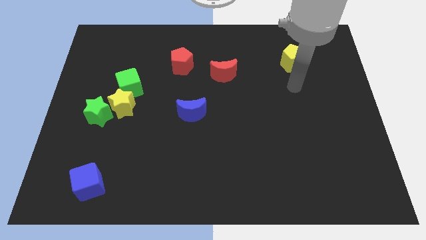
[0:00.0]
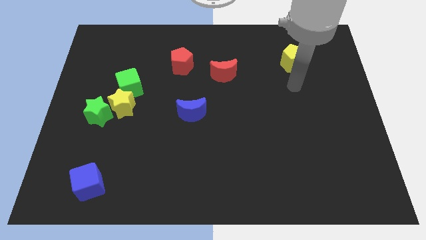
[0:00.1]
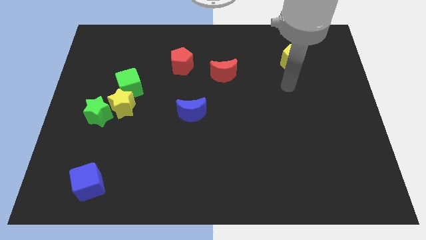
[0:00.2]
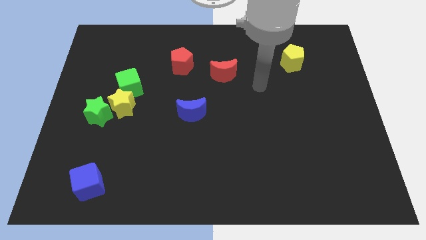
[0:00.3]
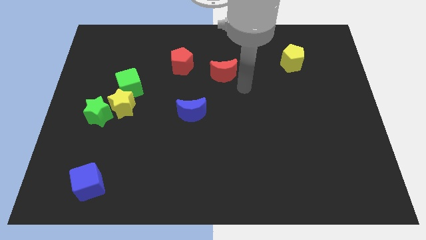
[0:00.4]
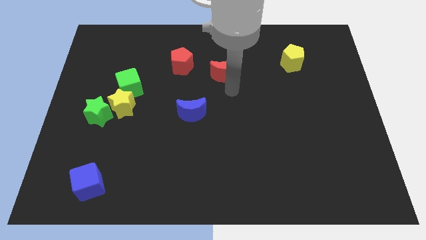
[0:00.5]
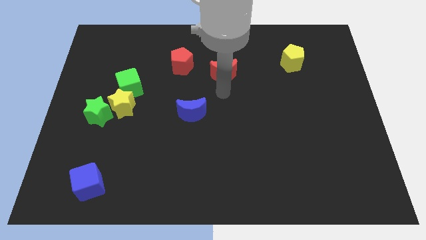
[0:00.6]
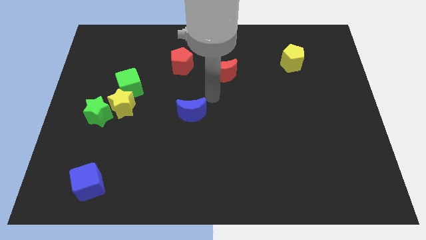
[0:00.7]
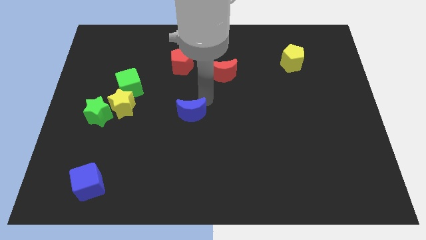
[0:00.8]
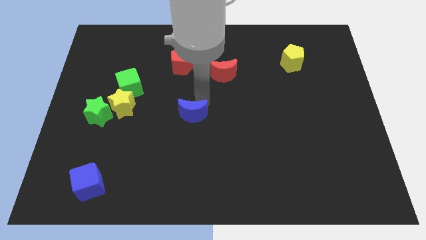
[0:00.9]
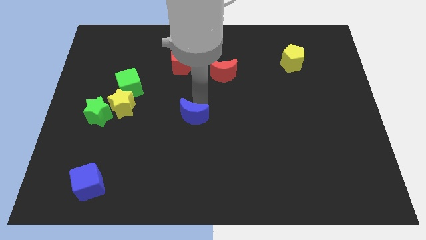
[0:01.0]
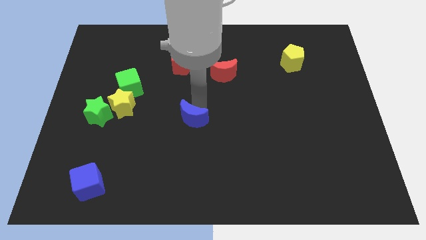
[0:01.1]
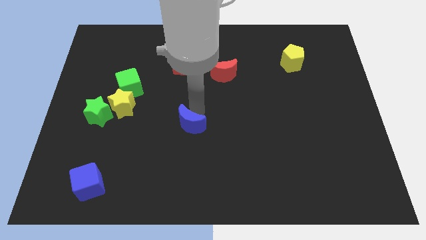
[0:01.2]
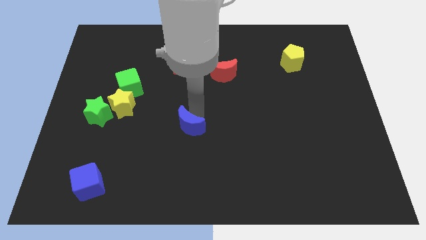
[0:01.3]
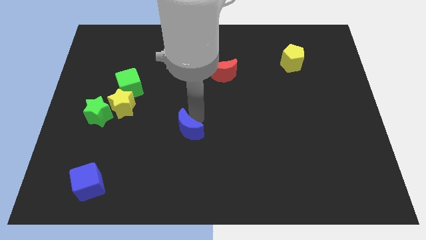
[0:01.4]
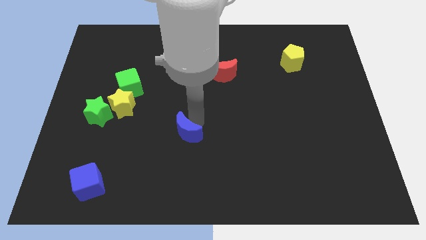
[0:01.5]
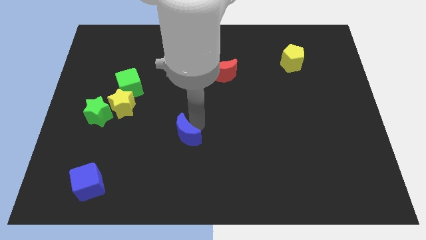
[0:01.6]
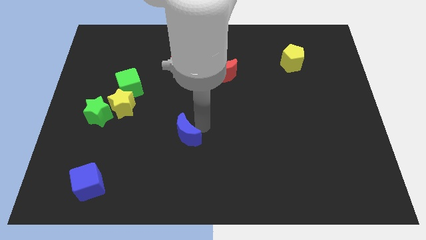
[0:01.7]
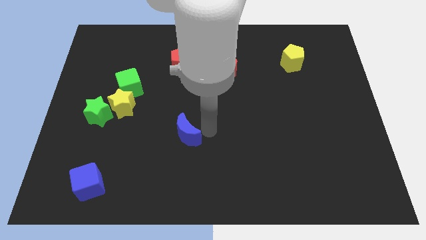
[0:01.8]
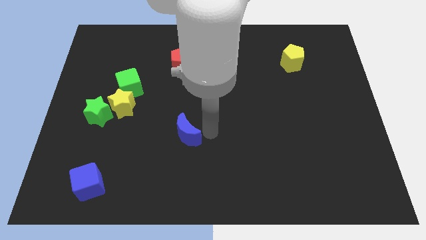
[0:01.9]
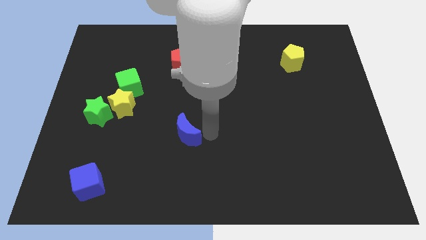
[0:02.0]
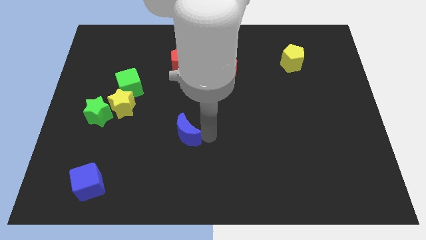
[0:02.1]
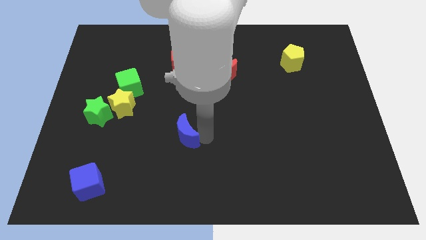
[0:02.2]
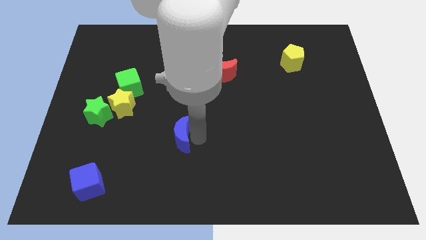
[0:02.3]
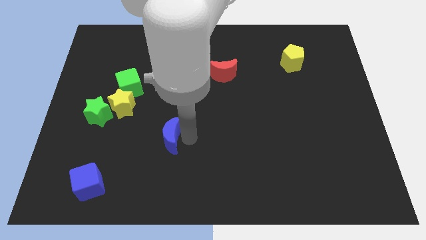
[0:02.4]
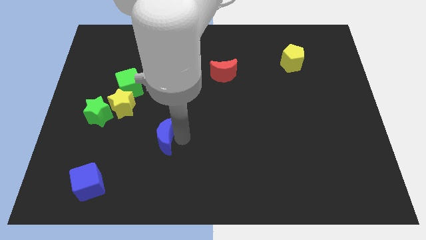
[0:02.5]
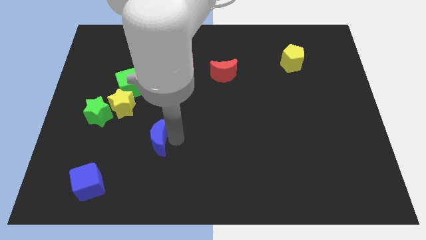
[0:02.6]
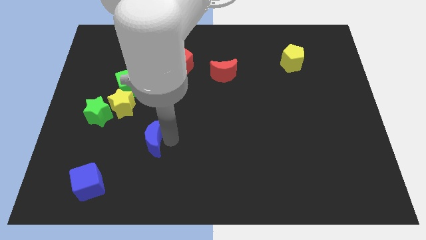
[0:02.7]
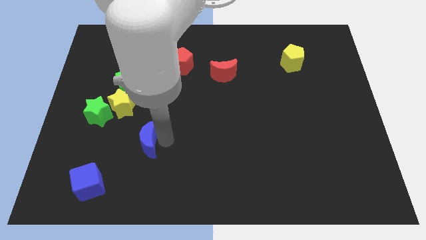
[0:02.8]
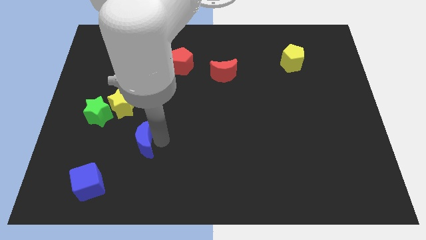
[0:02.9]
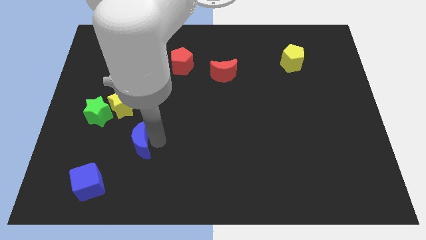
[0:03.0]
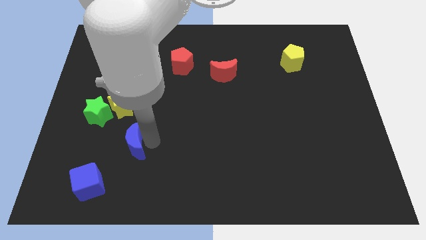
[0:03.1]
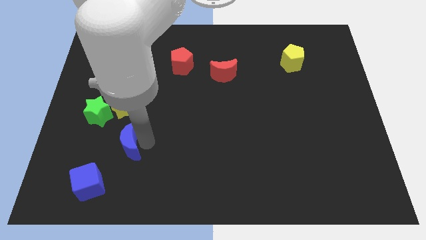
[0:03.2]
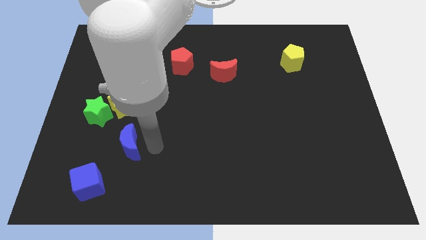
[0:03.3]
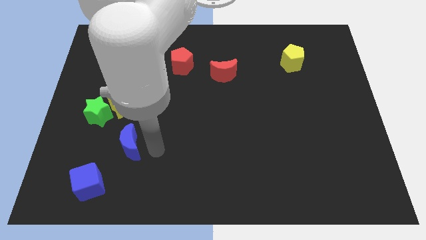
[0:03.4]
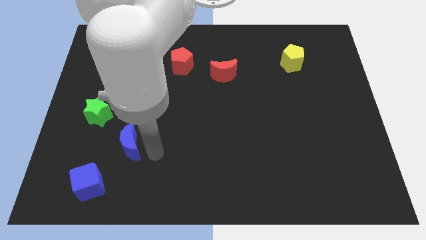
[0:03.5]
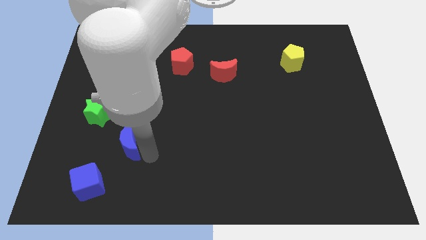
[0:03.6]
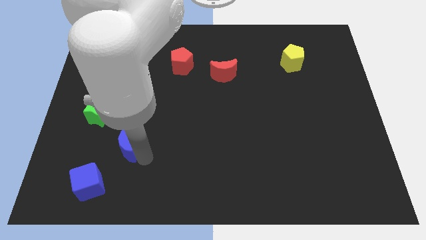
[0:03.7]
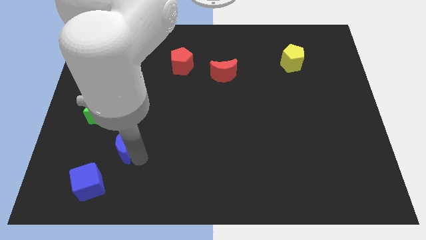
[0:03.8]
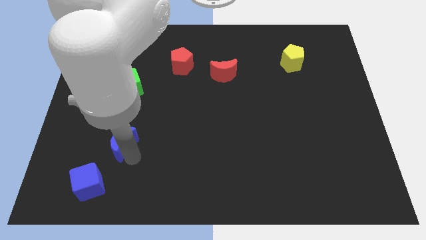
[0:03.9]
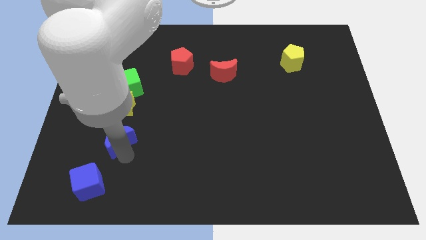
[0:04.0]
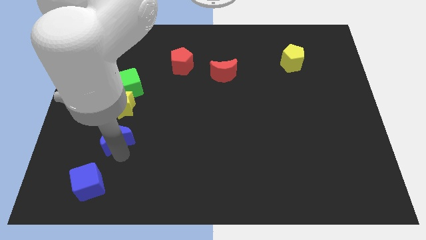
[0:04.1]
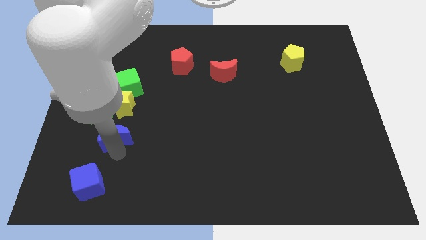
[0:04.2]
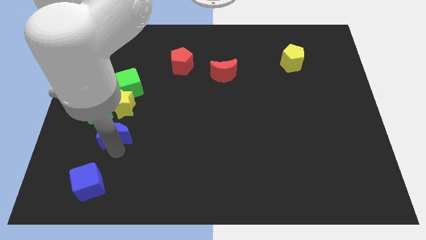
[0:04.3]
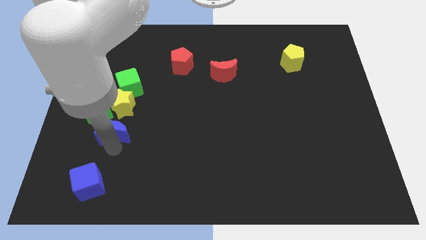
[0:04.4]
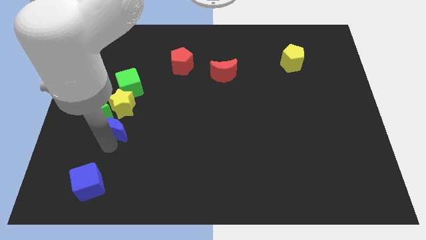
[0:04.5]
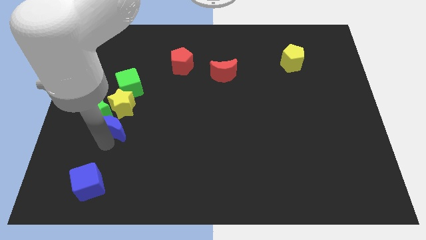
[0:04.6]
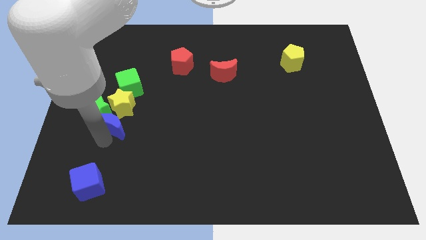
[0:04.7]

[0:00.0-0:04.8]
push the blue moon next to the green star

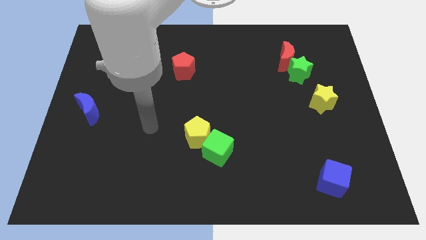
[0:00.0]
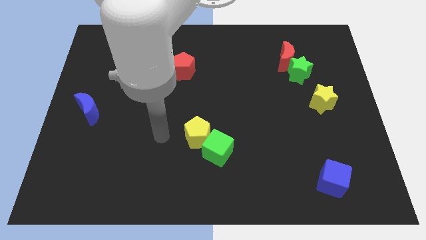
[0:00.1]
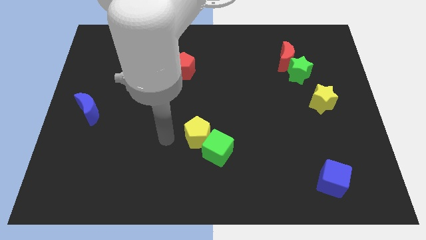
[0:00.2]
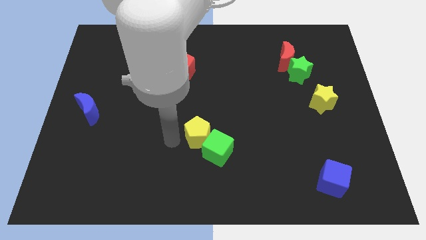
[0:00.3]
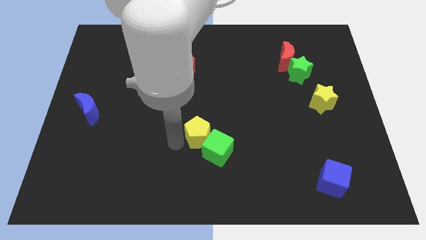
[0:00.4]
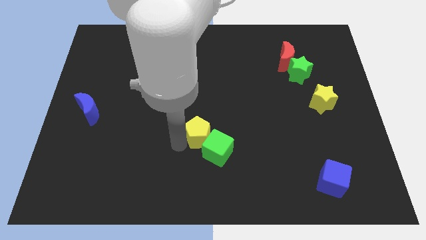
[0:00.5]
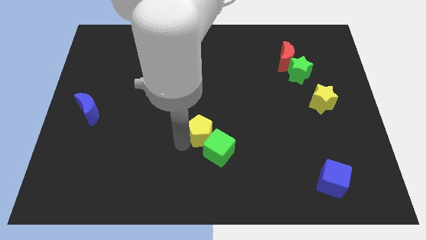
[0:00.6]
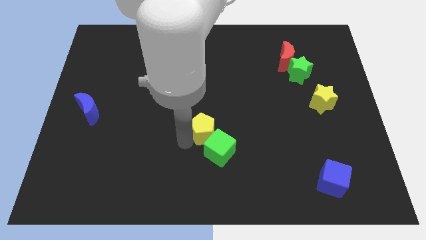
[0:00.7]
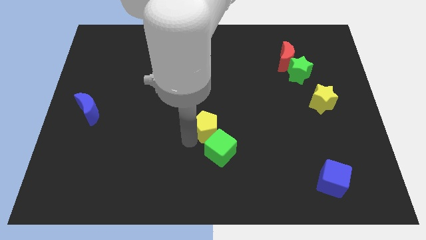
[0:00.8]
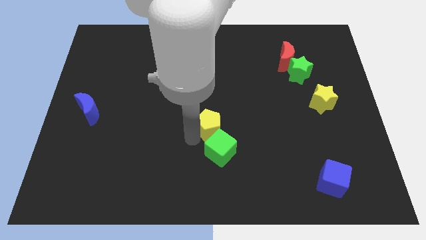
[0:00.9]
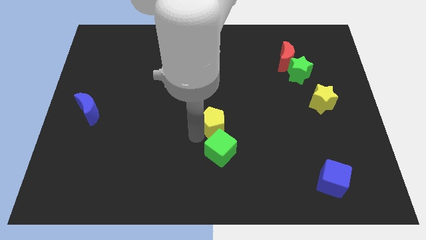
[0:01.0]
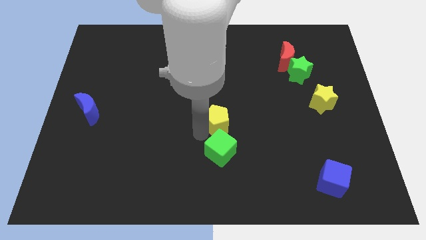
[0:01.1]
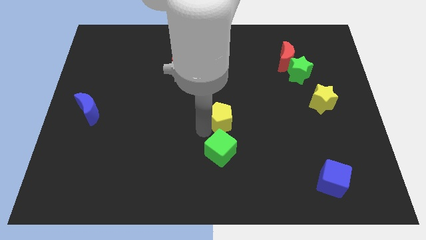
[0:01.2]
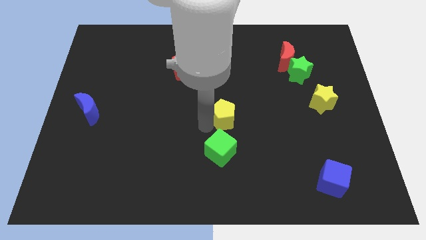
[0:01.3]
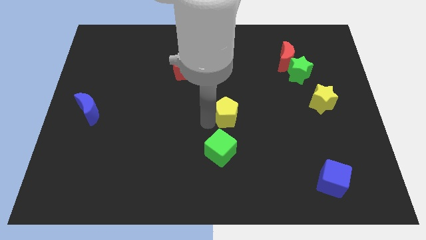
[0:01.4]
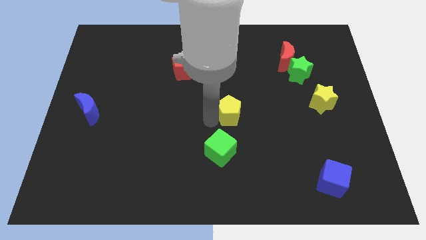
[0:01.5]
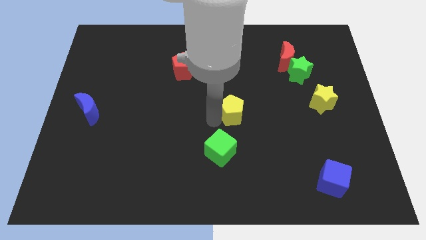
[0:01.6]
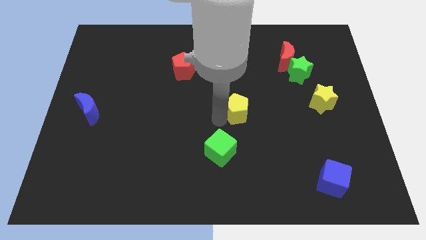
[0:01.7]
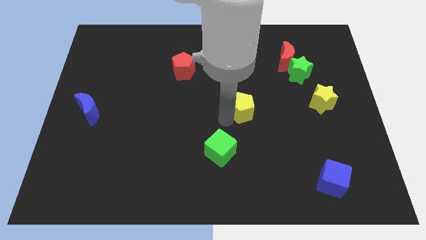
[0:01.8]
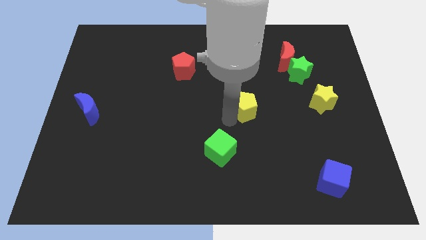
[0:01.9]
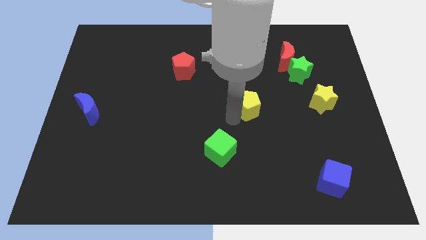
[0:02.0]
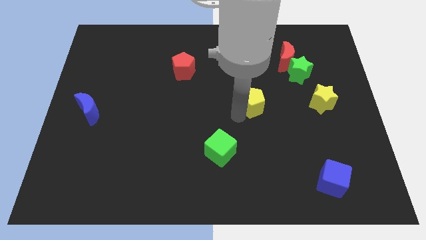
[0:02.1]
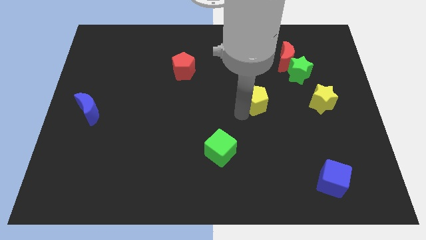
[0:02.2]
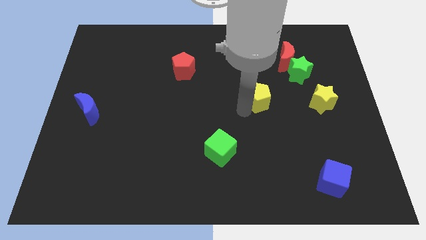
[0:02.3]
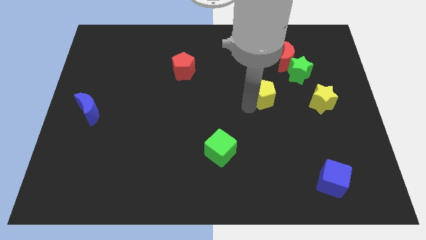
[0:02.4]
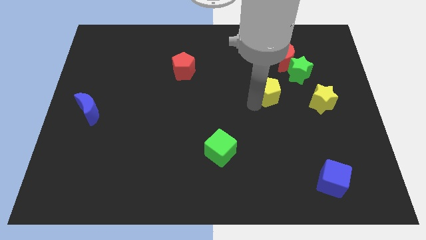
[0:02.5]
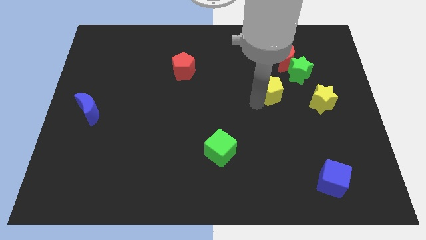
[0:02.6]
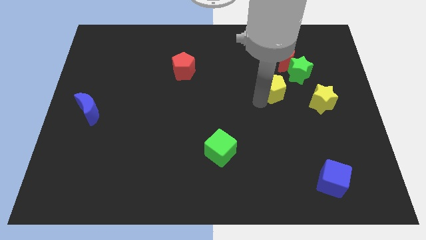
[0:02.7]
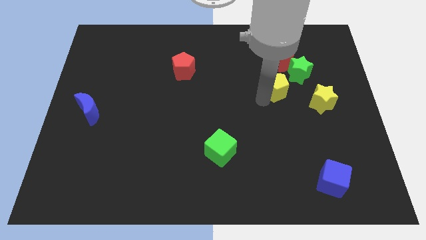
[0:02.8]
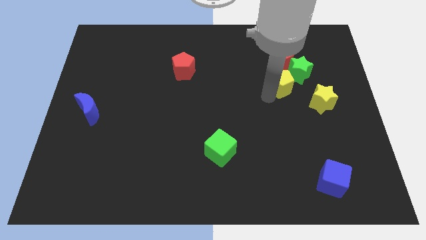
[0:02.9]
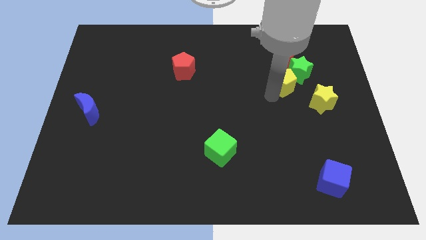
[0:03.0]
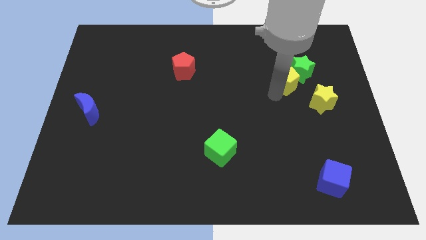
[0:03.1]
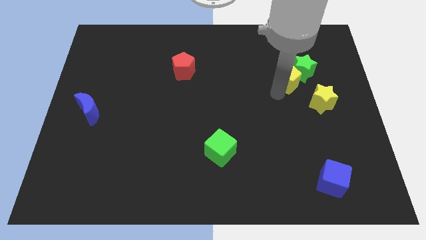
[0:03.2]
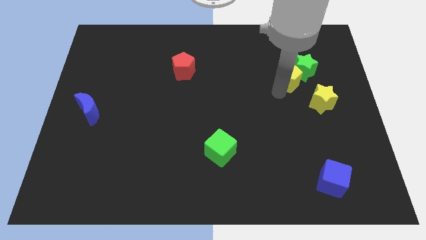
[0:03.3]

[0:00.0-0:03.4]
move the yellow pentagon close to the green star

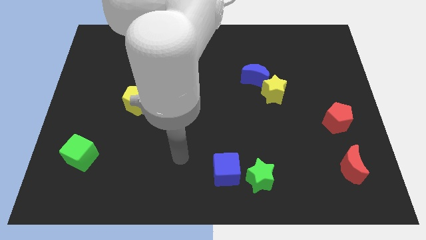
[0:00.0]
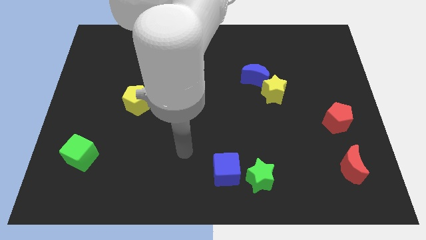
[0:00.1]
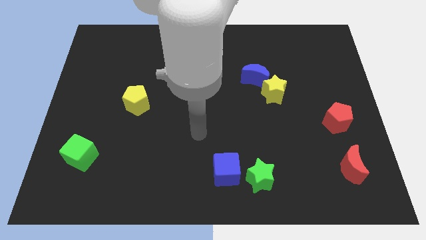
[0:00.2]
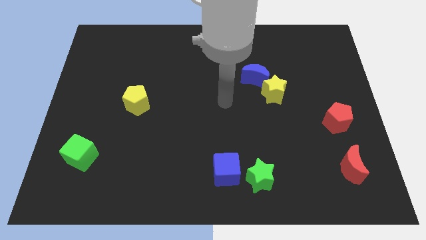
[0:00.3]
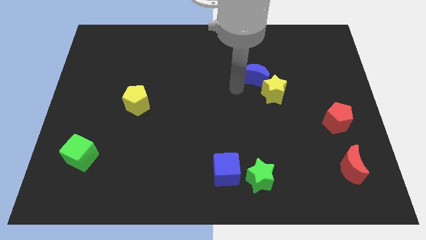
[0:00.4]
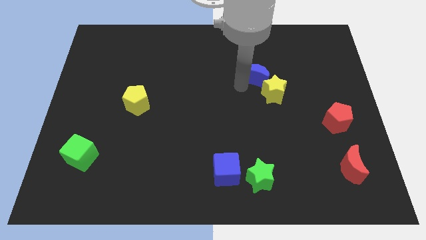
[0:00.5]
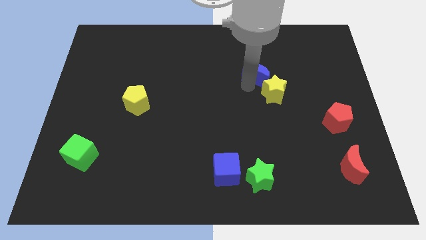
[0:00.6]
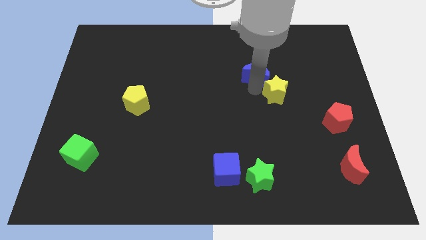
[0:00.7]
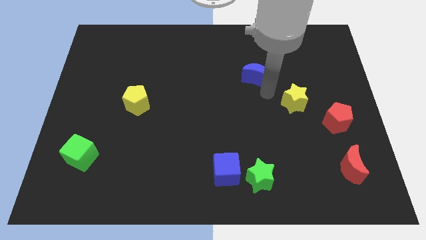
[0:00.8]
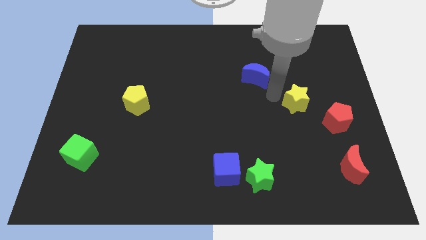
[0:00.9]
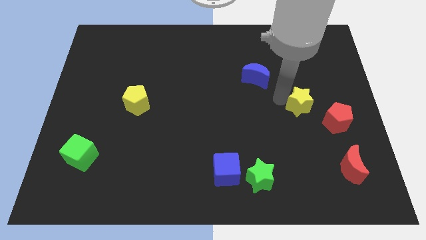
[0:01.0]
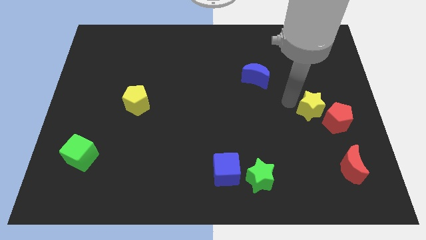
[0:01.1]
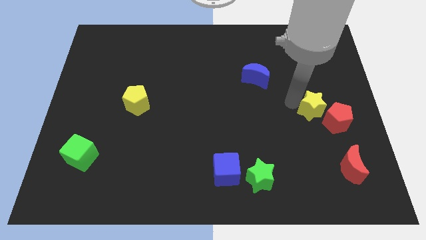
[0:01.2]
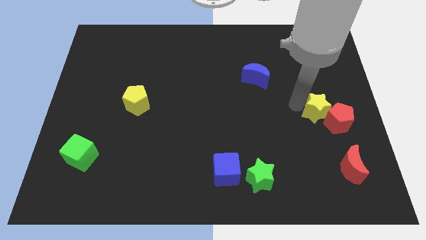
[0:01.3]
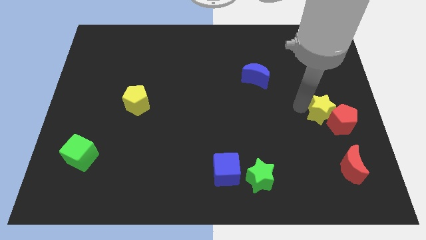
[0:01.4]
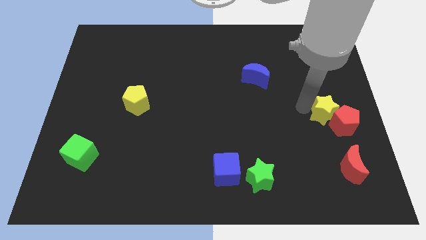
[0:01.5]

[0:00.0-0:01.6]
put the yellow star to the red pentagon
